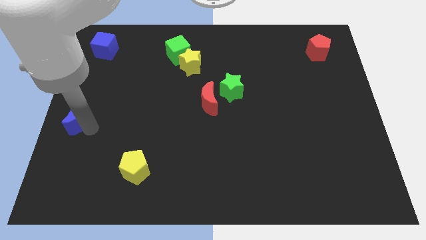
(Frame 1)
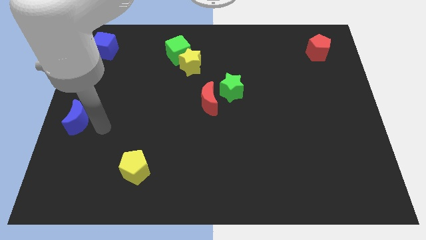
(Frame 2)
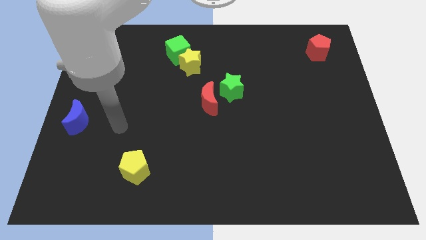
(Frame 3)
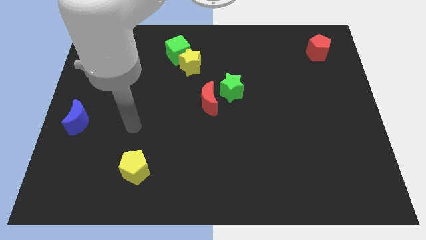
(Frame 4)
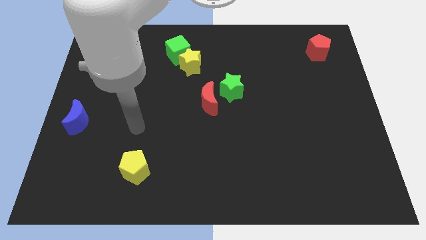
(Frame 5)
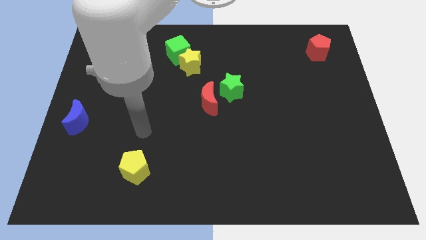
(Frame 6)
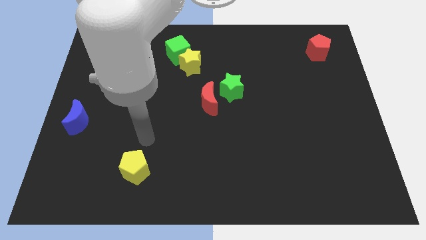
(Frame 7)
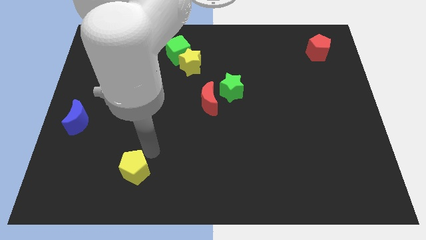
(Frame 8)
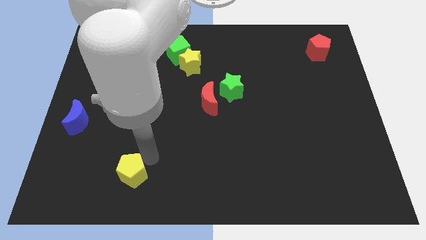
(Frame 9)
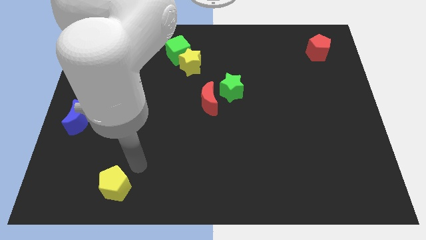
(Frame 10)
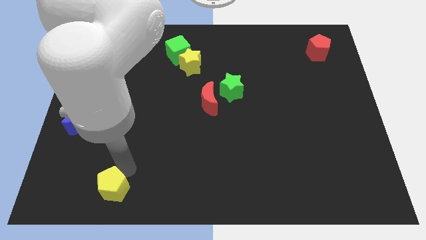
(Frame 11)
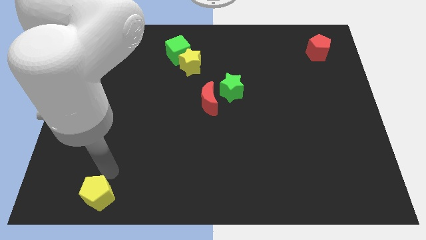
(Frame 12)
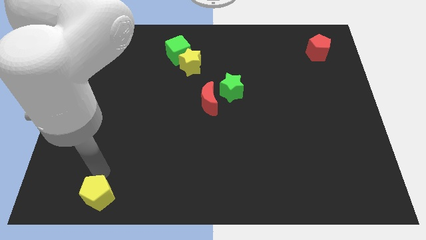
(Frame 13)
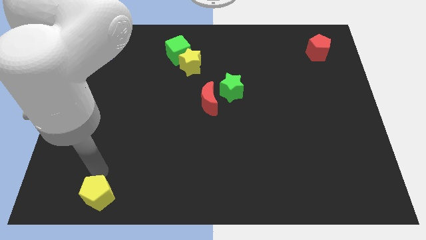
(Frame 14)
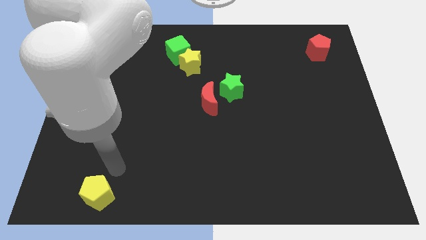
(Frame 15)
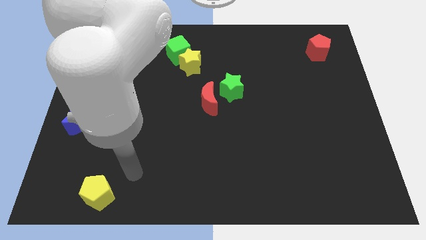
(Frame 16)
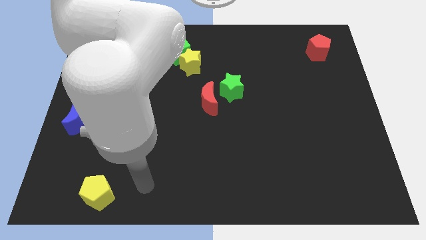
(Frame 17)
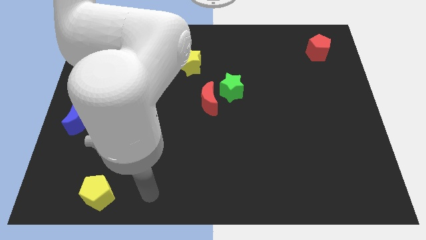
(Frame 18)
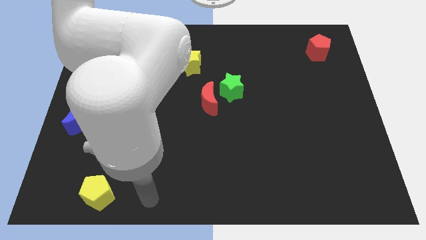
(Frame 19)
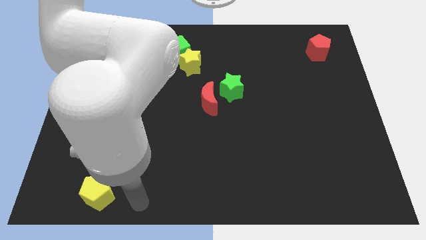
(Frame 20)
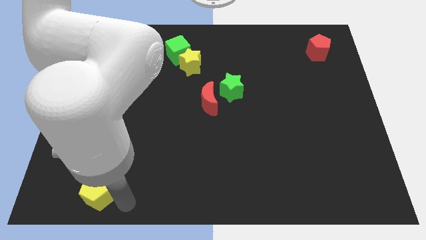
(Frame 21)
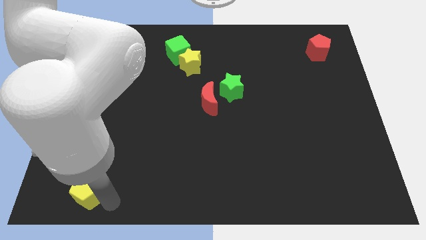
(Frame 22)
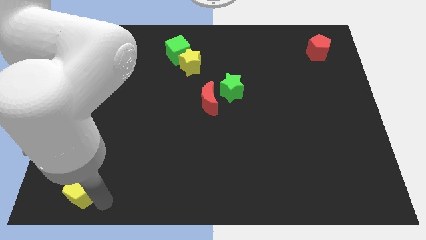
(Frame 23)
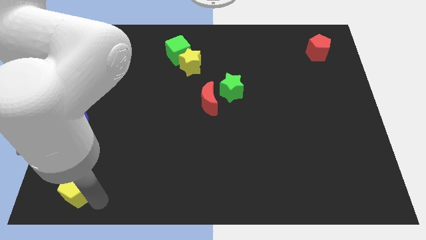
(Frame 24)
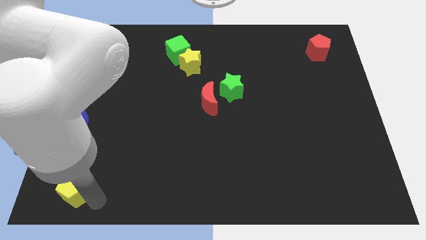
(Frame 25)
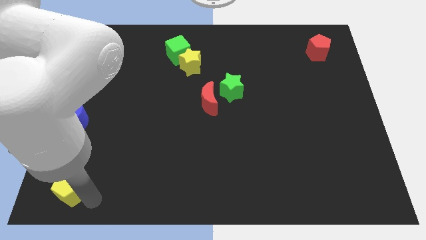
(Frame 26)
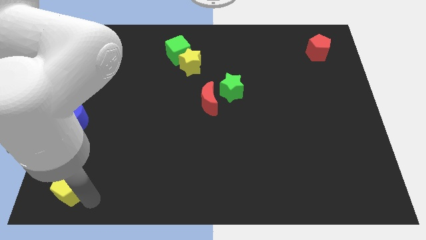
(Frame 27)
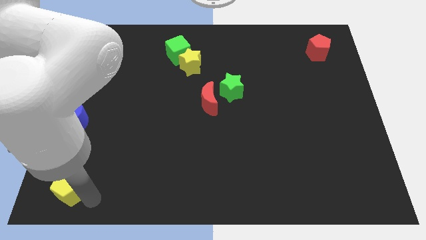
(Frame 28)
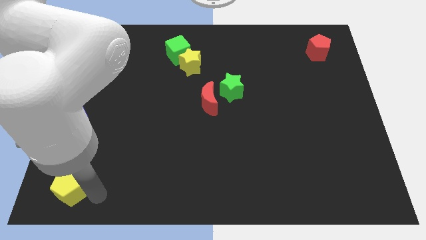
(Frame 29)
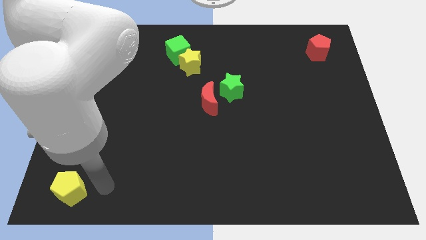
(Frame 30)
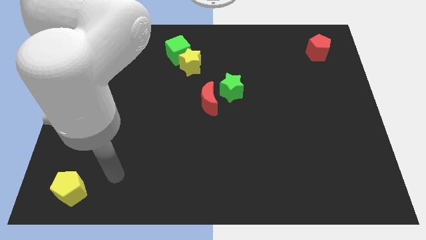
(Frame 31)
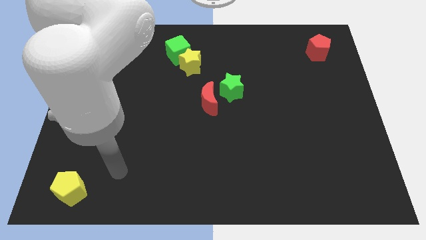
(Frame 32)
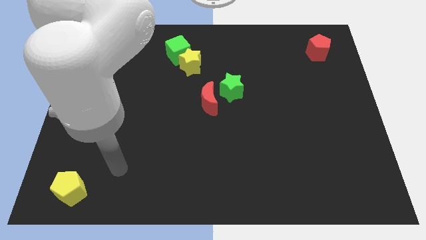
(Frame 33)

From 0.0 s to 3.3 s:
push the yellow pentagon to the bottom of the blue crescent

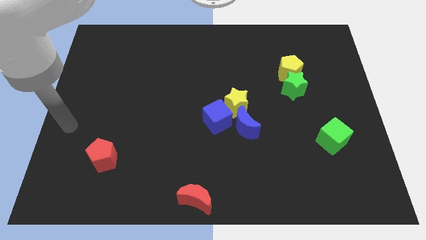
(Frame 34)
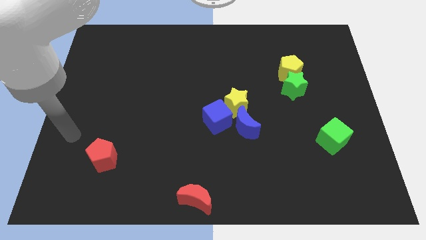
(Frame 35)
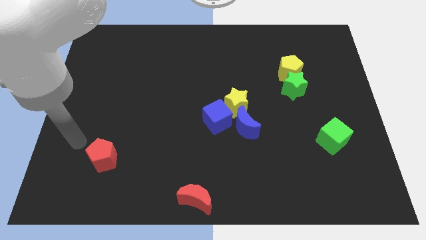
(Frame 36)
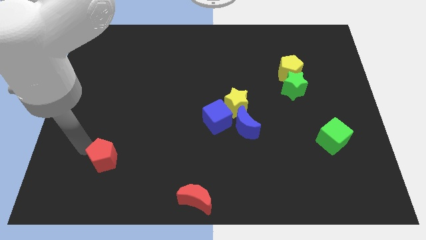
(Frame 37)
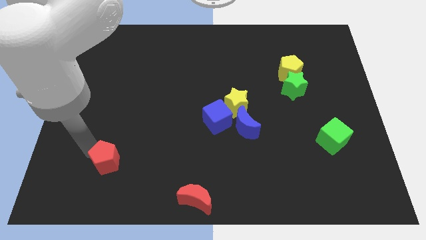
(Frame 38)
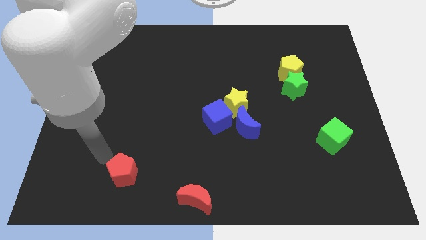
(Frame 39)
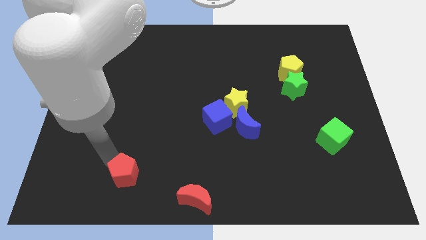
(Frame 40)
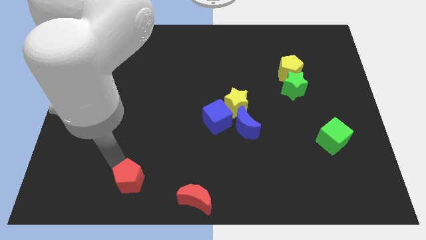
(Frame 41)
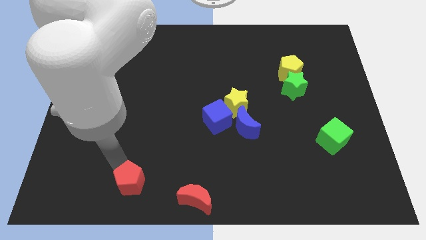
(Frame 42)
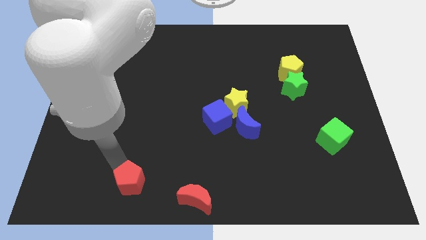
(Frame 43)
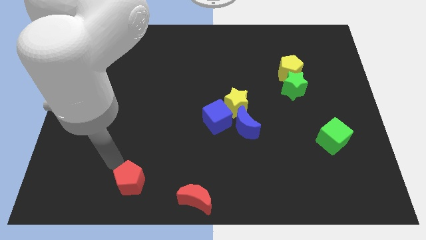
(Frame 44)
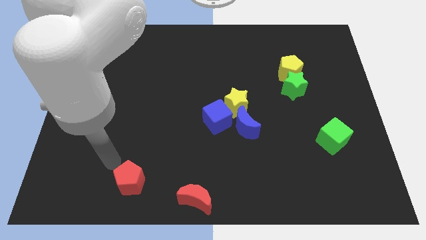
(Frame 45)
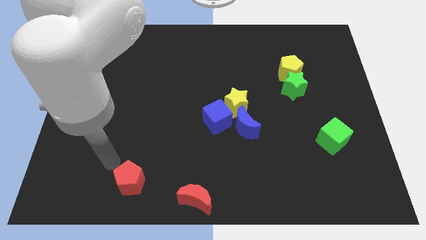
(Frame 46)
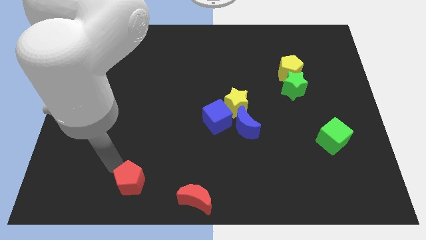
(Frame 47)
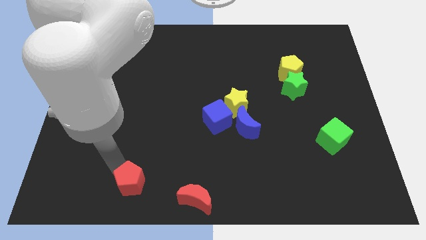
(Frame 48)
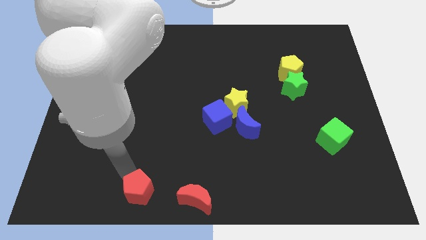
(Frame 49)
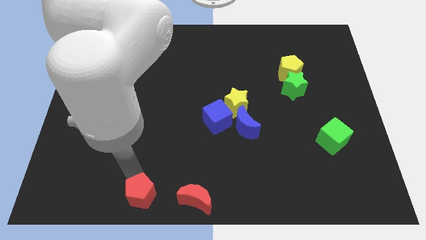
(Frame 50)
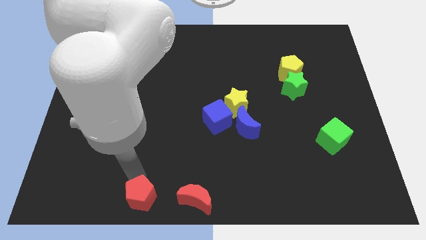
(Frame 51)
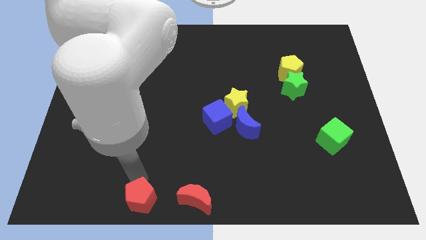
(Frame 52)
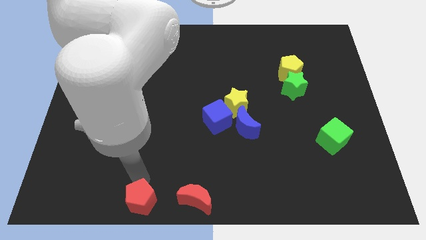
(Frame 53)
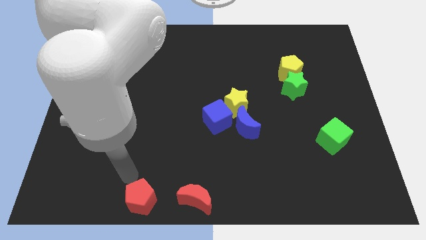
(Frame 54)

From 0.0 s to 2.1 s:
move the red pentagon to the left side of the red moon

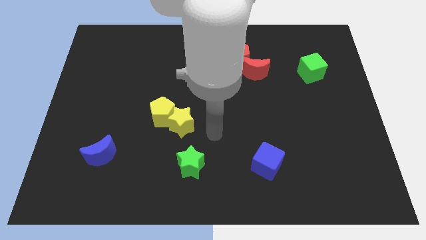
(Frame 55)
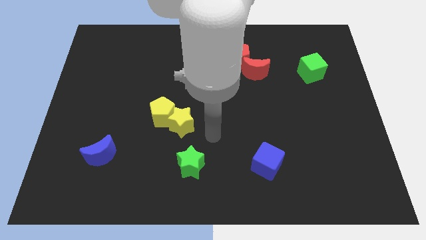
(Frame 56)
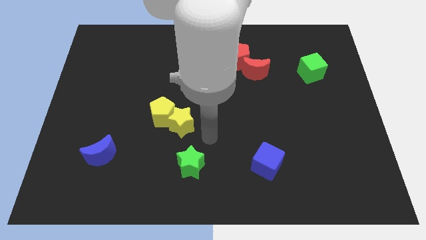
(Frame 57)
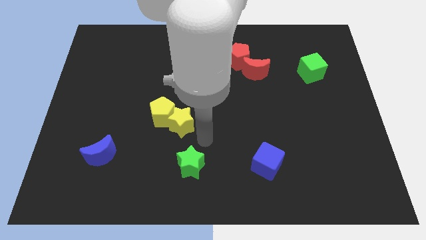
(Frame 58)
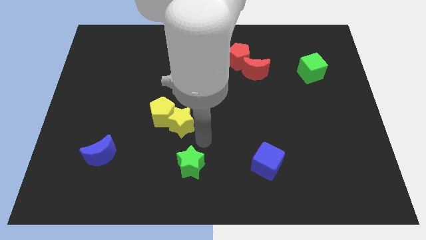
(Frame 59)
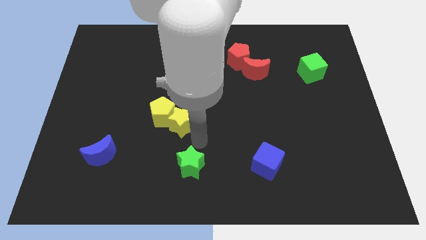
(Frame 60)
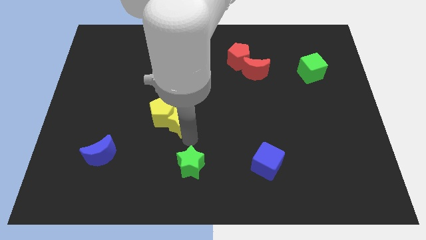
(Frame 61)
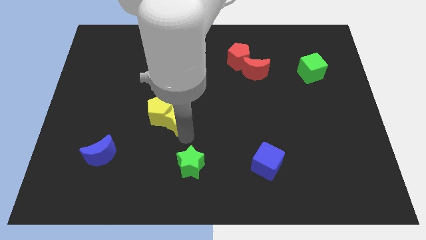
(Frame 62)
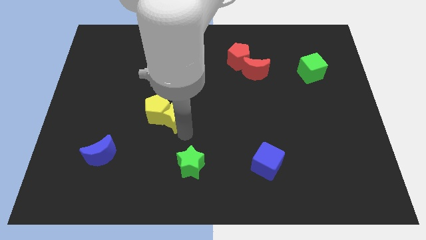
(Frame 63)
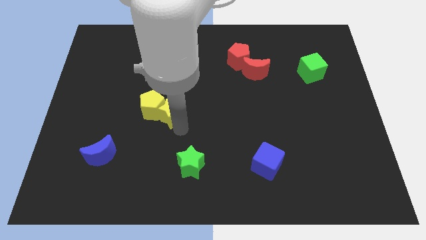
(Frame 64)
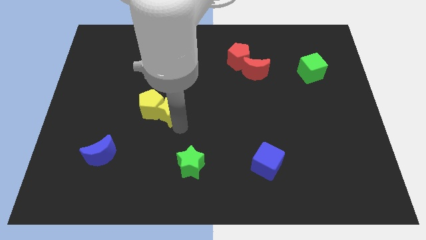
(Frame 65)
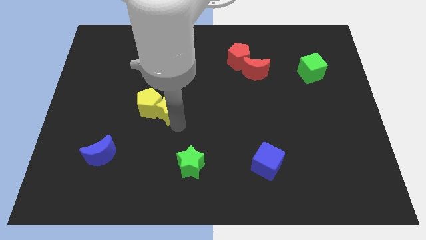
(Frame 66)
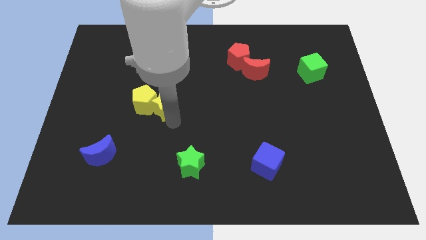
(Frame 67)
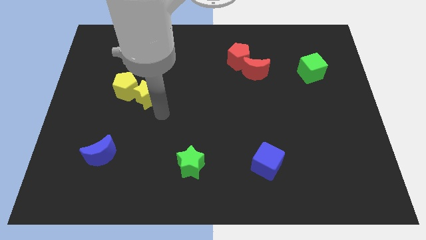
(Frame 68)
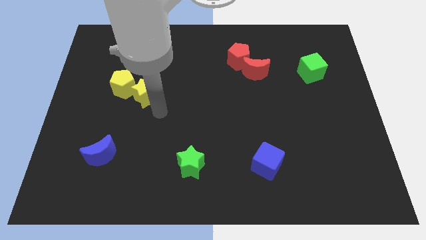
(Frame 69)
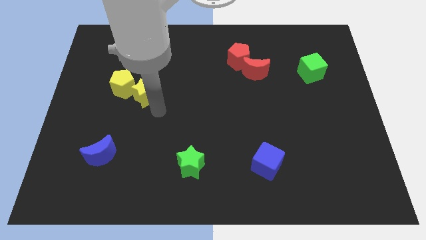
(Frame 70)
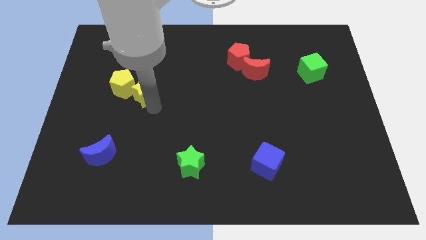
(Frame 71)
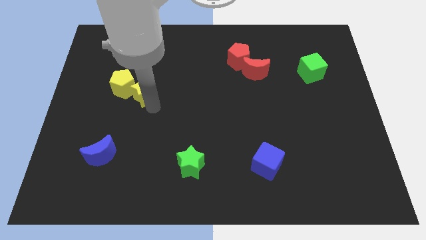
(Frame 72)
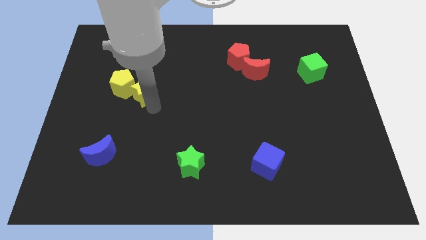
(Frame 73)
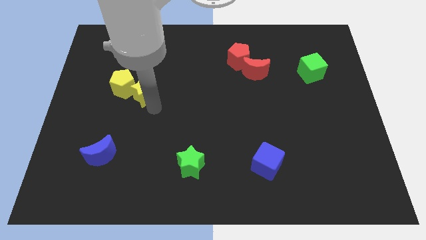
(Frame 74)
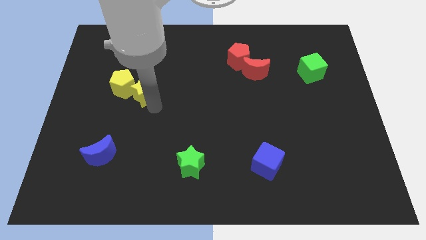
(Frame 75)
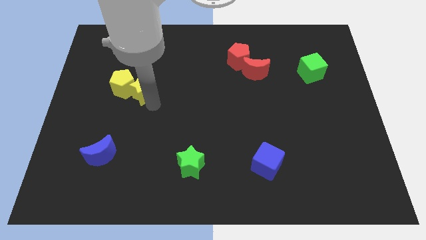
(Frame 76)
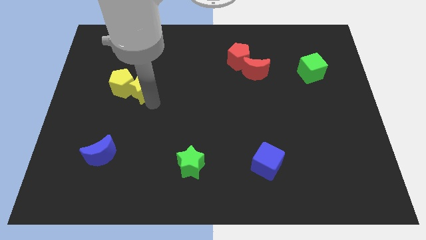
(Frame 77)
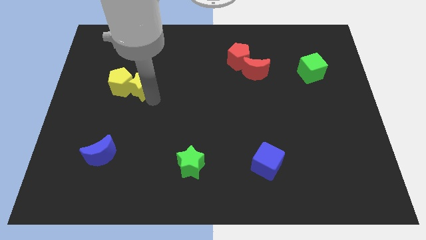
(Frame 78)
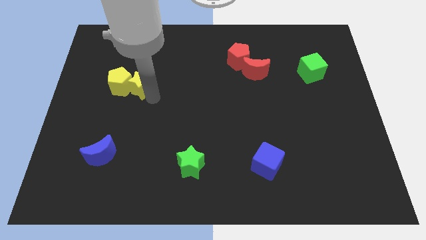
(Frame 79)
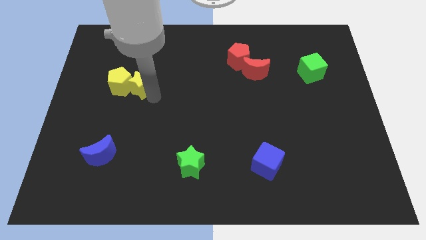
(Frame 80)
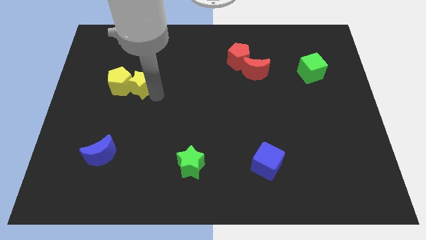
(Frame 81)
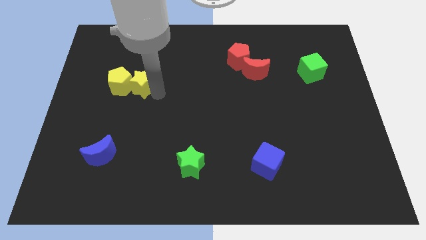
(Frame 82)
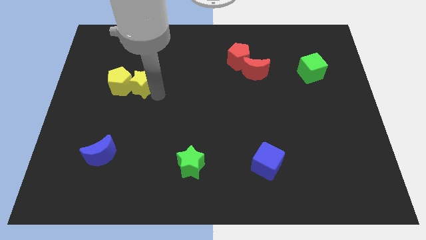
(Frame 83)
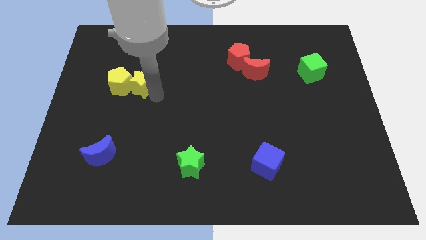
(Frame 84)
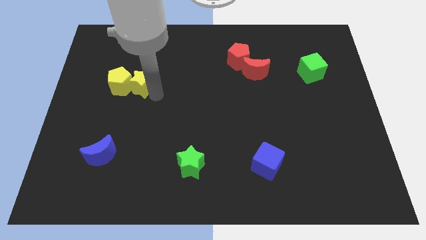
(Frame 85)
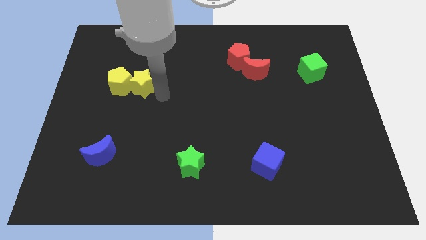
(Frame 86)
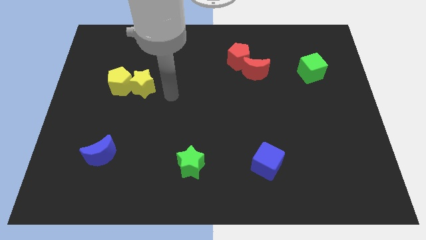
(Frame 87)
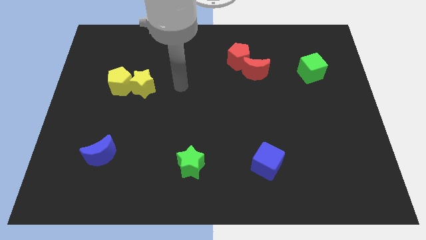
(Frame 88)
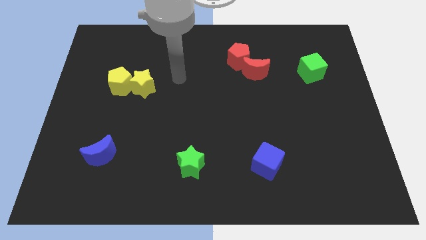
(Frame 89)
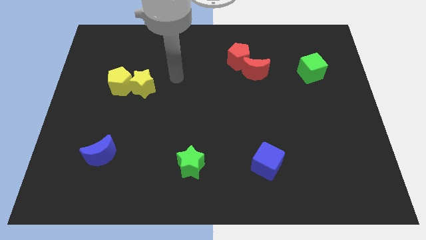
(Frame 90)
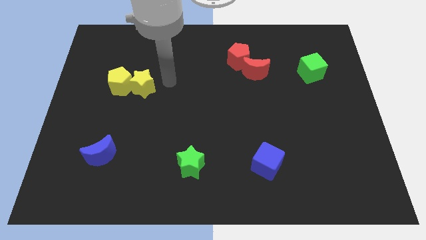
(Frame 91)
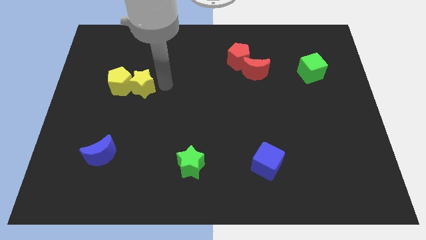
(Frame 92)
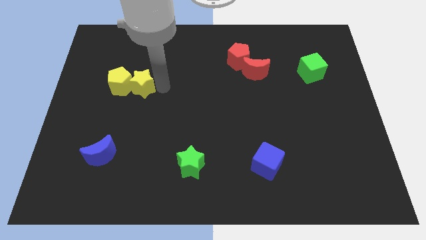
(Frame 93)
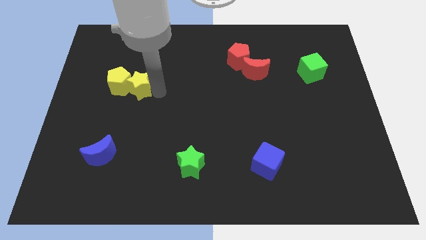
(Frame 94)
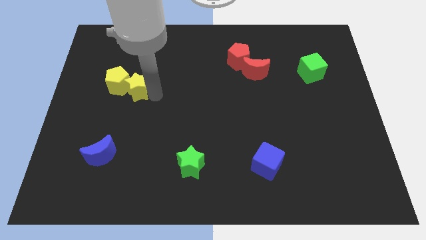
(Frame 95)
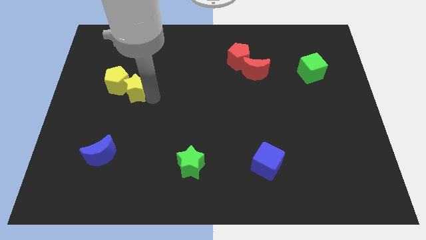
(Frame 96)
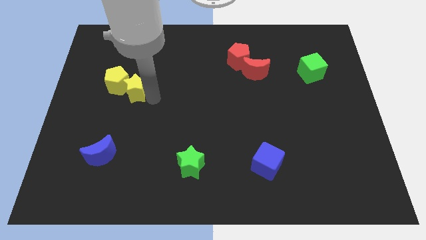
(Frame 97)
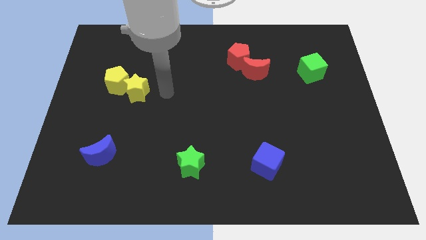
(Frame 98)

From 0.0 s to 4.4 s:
move the yellow blocks diagonally to the green star
